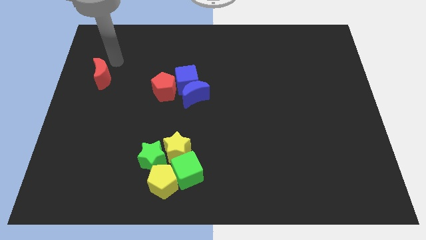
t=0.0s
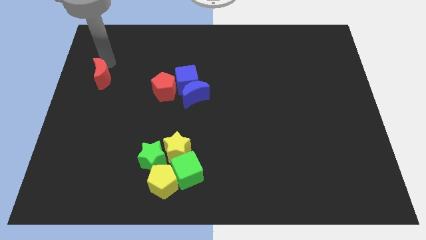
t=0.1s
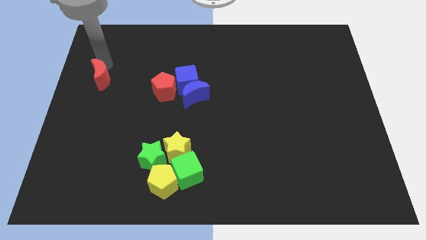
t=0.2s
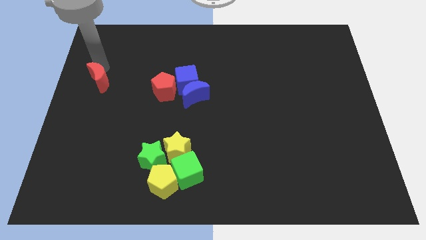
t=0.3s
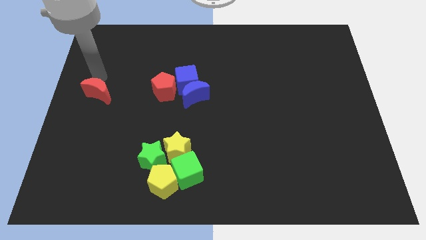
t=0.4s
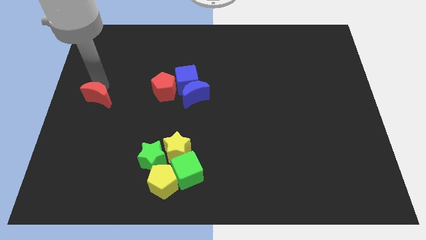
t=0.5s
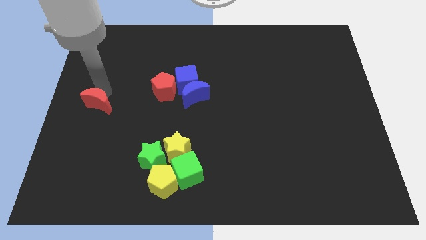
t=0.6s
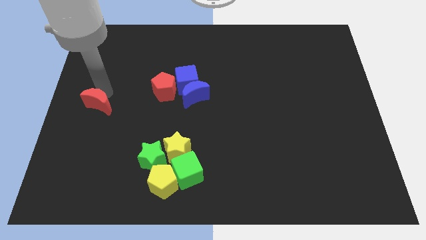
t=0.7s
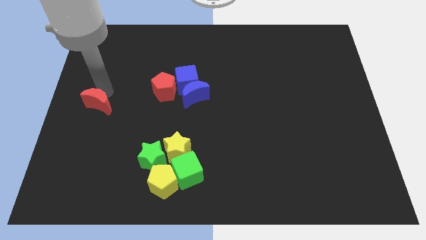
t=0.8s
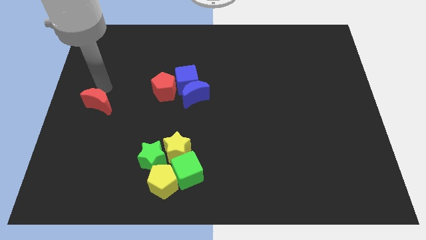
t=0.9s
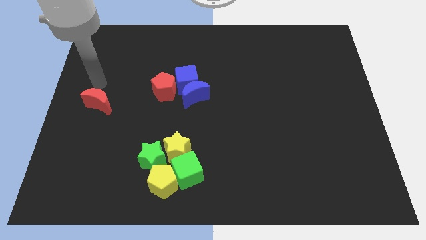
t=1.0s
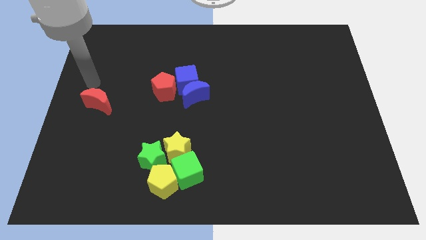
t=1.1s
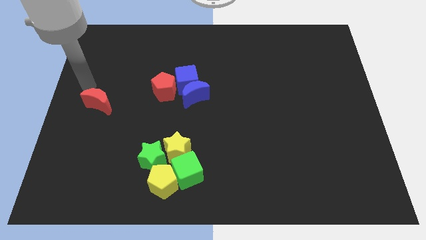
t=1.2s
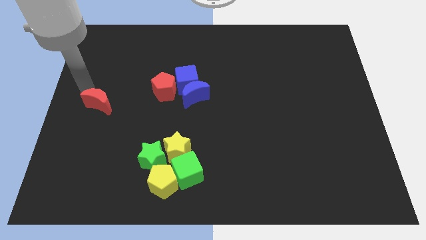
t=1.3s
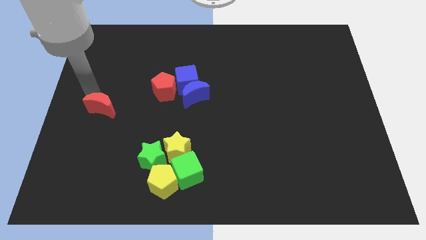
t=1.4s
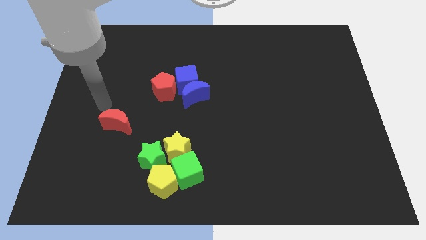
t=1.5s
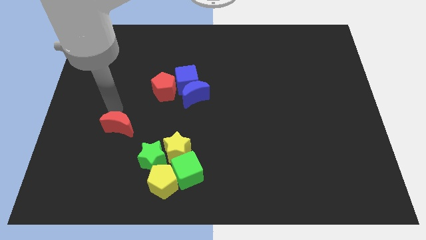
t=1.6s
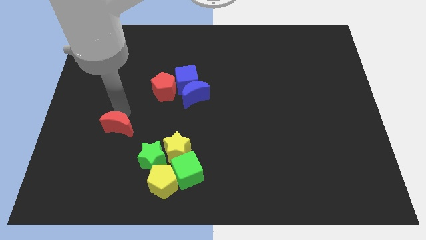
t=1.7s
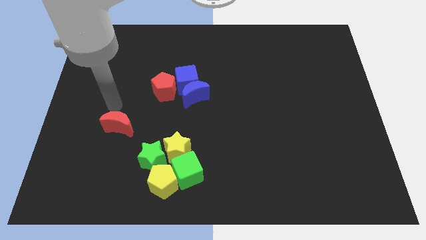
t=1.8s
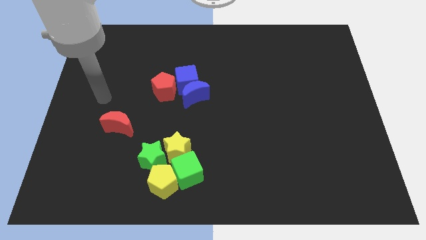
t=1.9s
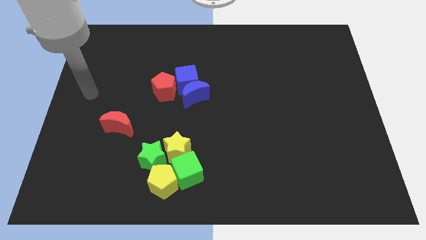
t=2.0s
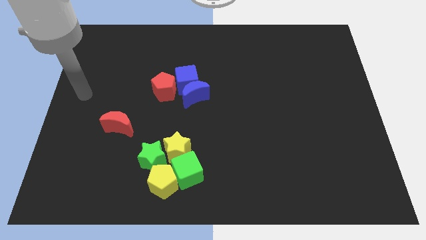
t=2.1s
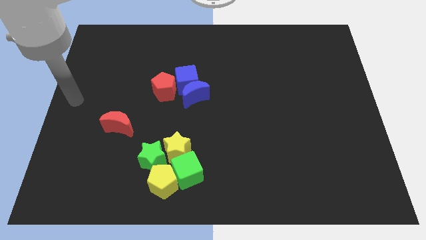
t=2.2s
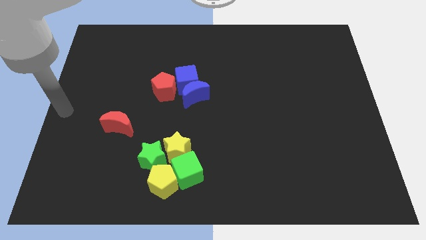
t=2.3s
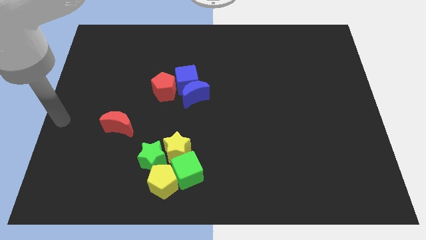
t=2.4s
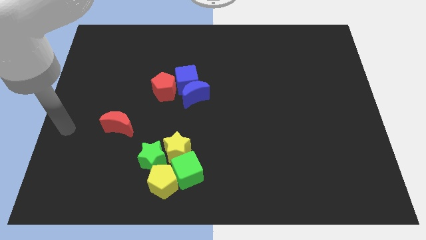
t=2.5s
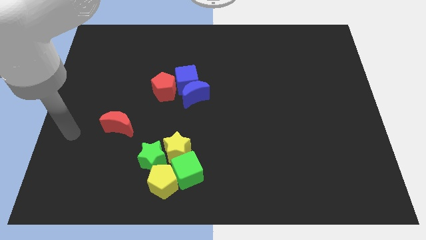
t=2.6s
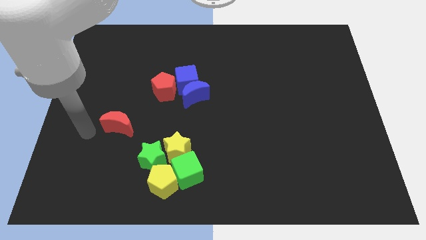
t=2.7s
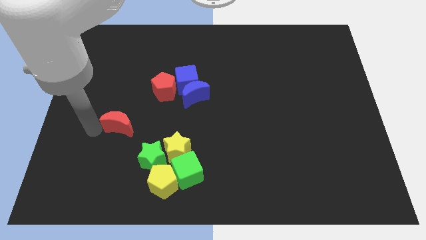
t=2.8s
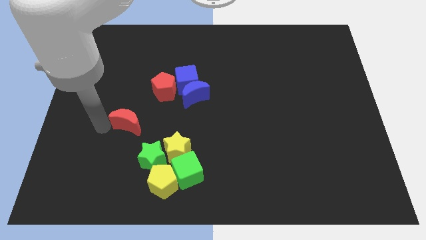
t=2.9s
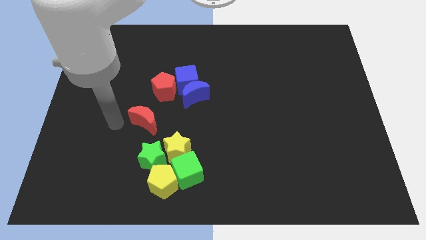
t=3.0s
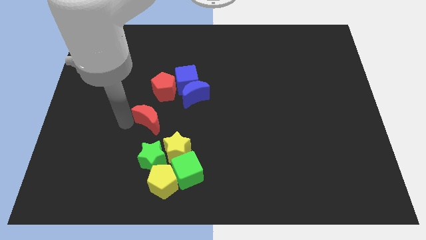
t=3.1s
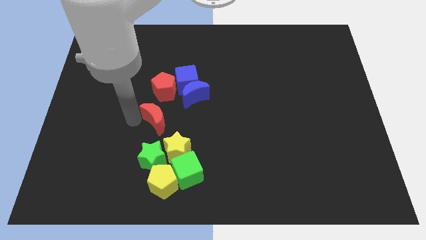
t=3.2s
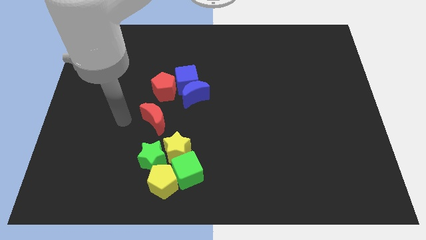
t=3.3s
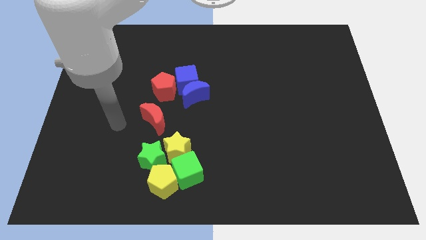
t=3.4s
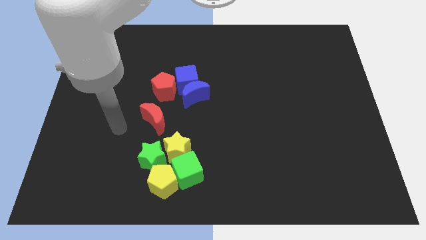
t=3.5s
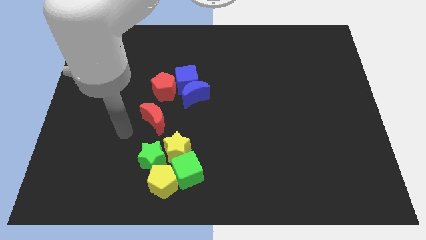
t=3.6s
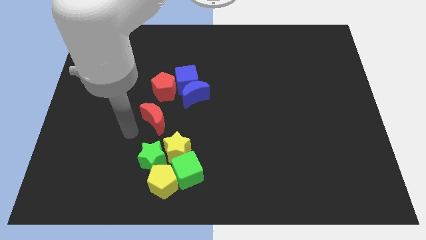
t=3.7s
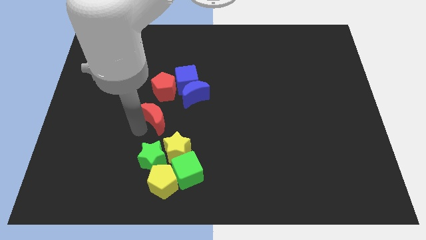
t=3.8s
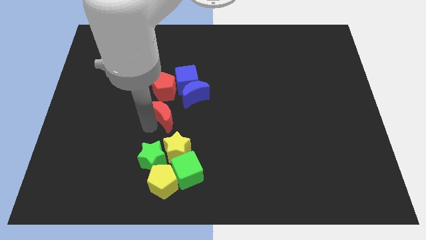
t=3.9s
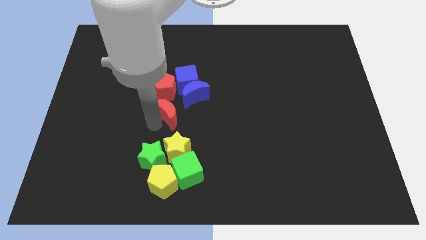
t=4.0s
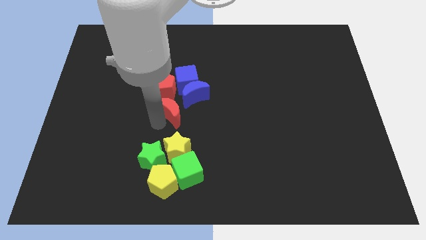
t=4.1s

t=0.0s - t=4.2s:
place red moon to the bottom of red pentagon

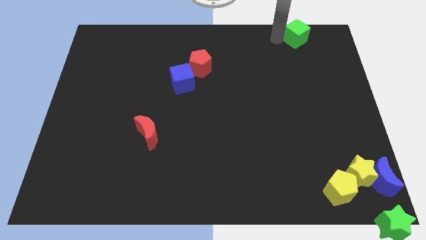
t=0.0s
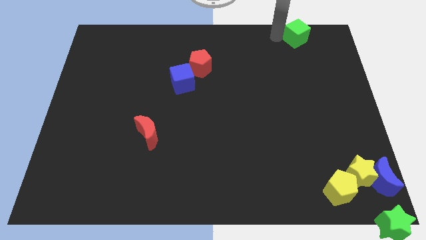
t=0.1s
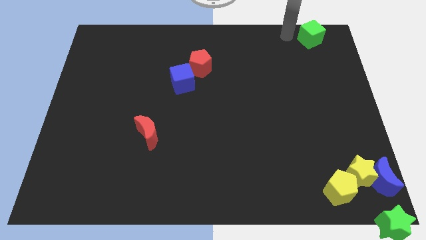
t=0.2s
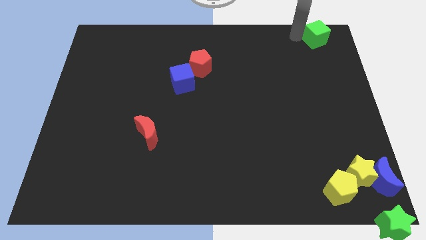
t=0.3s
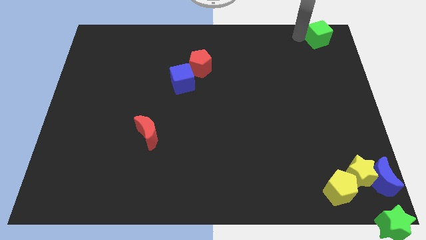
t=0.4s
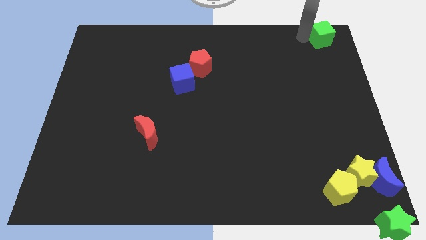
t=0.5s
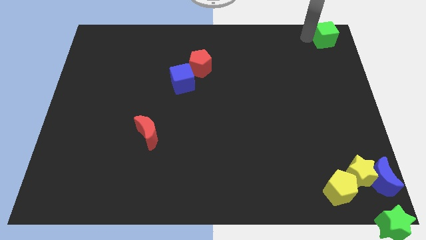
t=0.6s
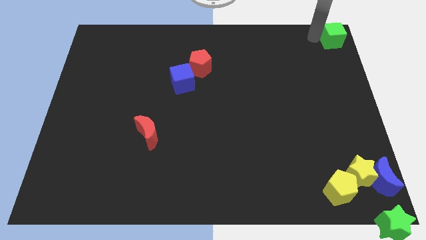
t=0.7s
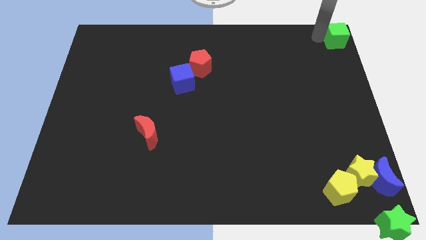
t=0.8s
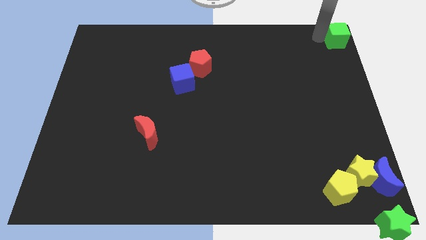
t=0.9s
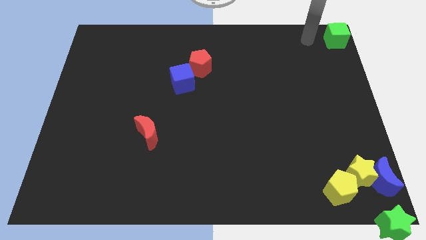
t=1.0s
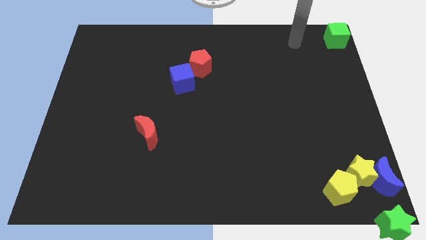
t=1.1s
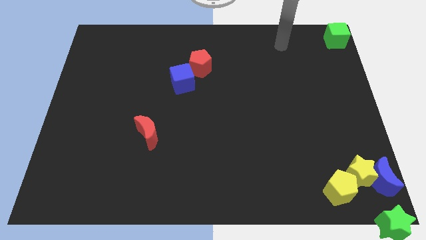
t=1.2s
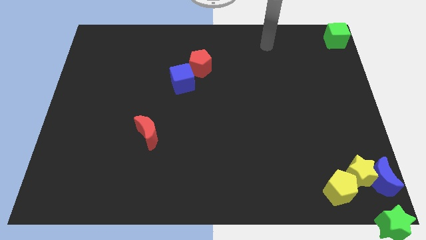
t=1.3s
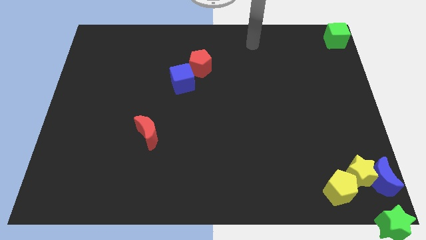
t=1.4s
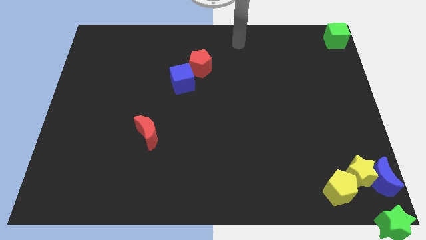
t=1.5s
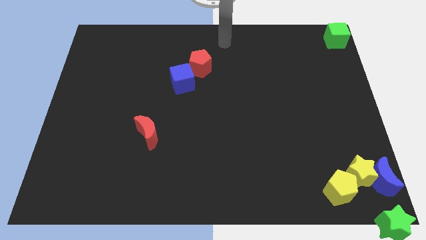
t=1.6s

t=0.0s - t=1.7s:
place the green cube at the top right corner of the board

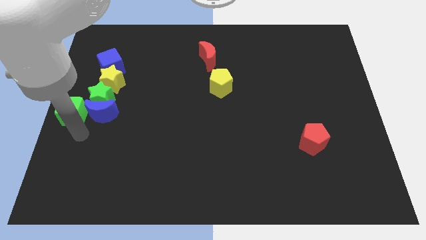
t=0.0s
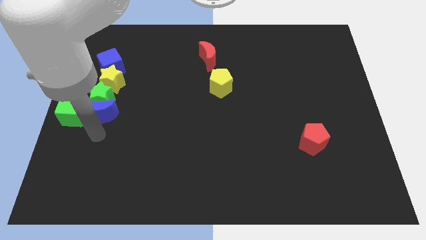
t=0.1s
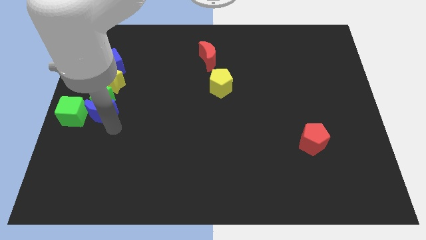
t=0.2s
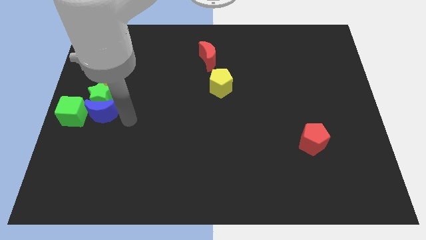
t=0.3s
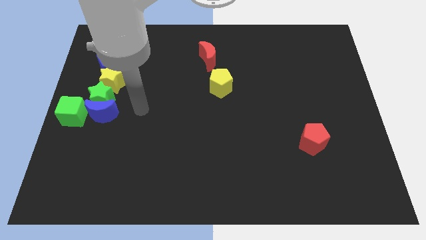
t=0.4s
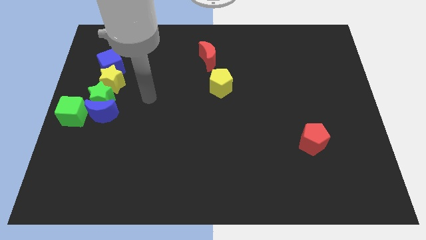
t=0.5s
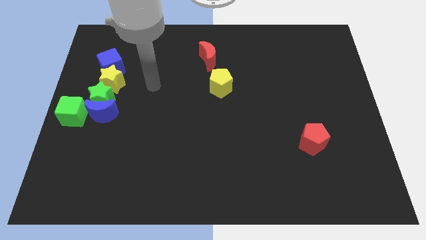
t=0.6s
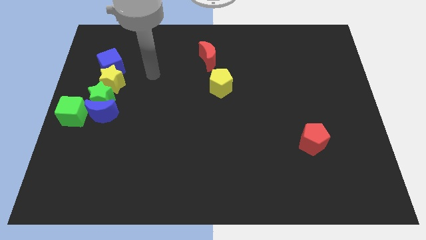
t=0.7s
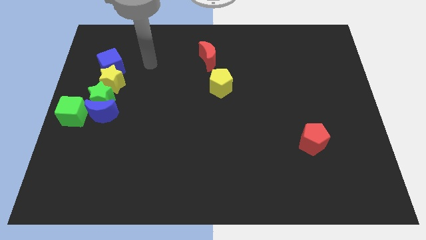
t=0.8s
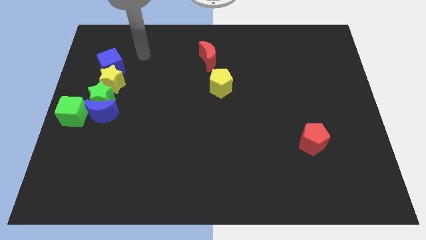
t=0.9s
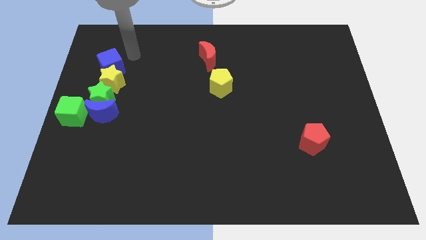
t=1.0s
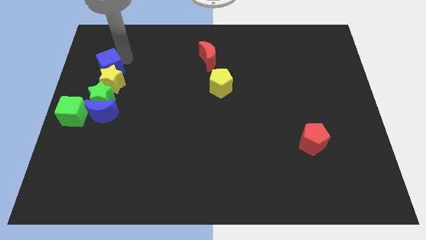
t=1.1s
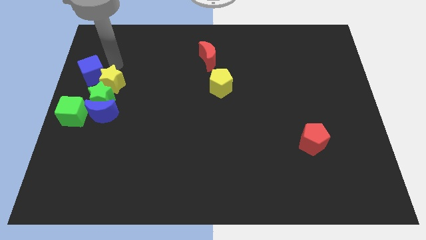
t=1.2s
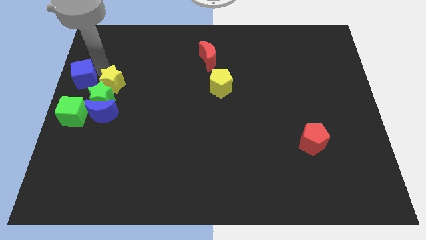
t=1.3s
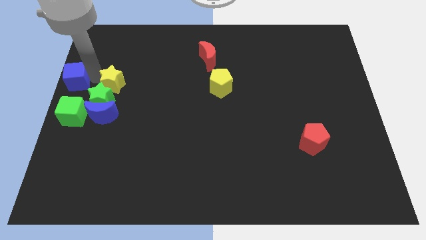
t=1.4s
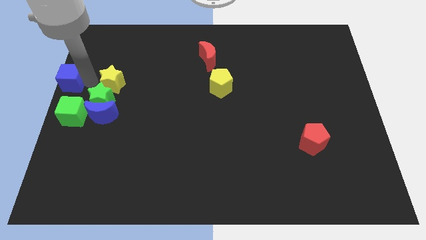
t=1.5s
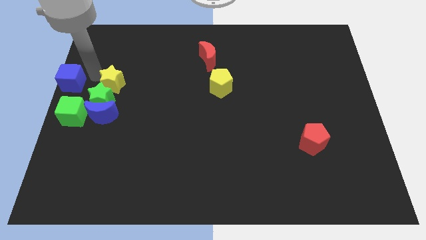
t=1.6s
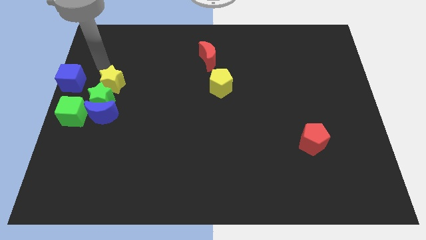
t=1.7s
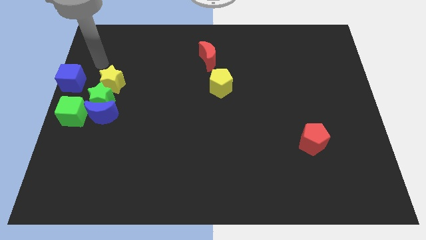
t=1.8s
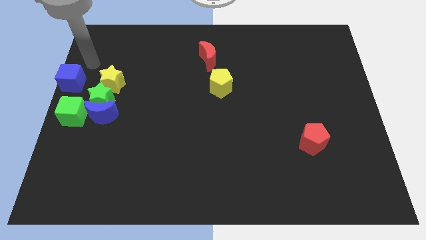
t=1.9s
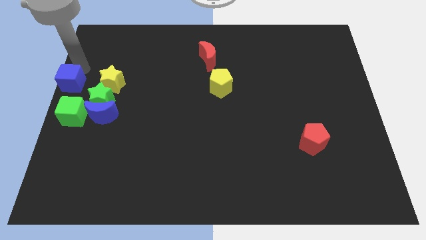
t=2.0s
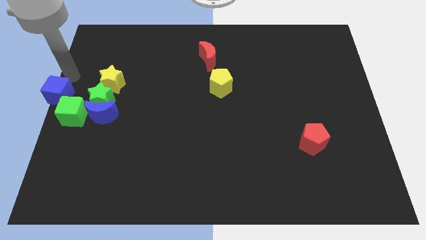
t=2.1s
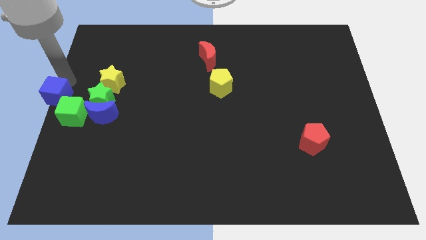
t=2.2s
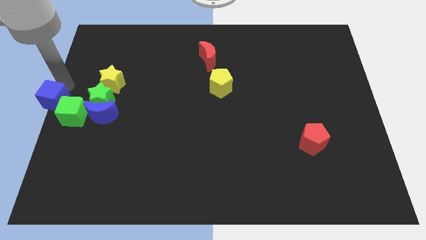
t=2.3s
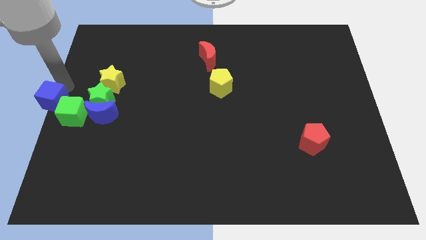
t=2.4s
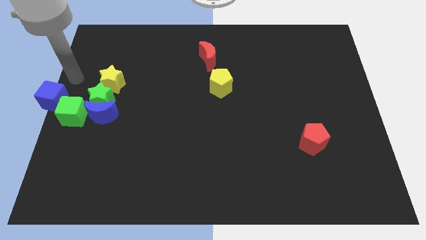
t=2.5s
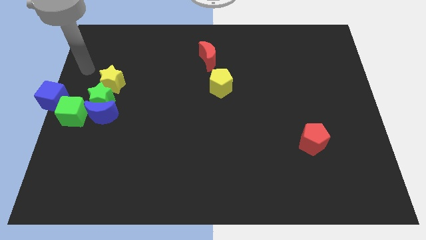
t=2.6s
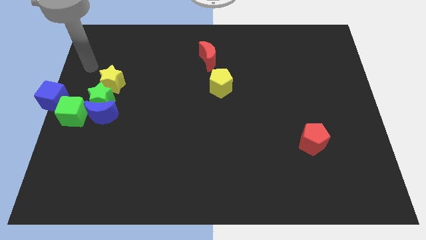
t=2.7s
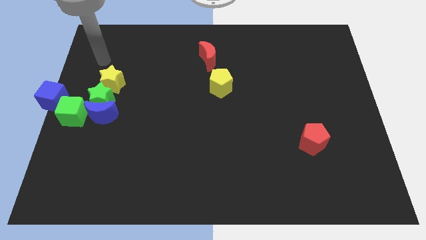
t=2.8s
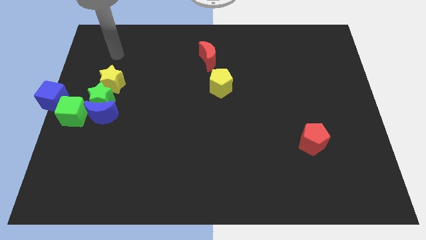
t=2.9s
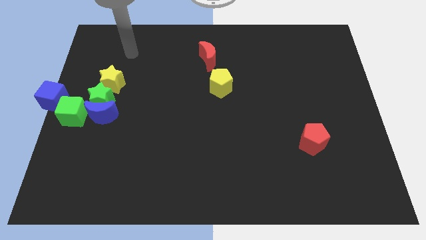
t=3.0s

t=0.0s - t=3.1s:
push the blue cube to the left side of the board
